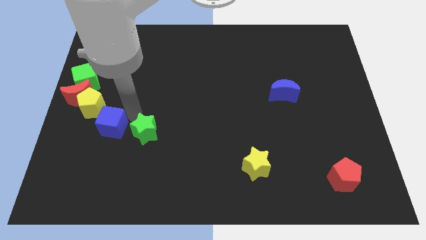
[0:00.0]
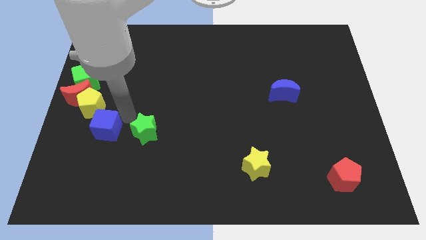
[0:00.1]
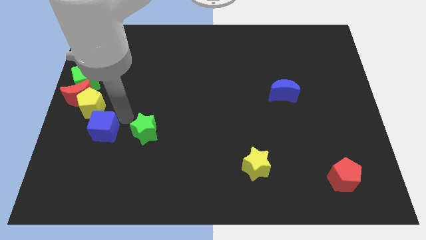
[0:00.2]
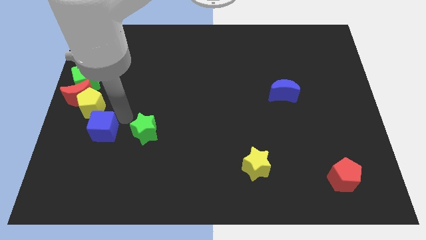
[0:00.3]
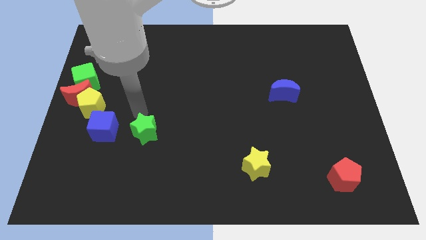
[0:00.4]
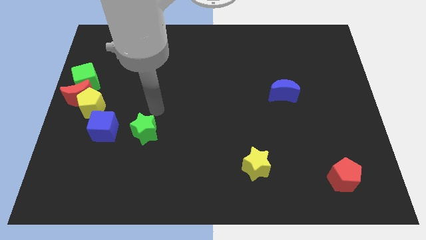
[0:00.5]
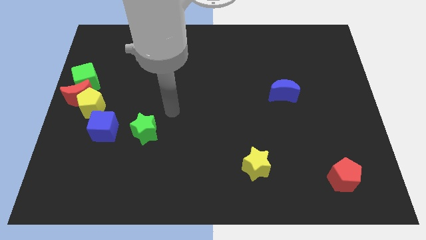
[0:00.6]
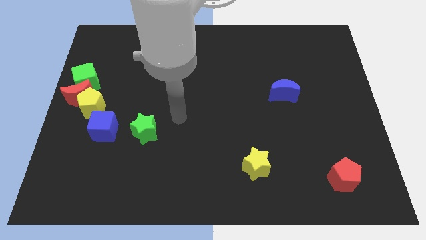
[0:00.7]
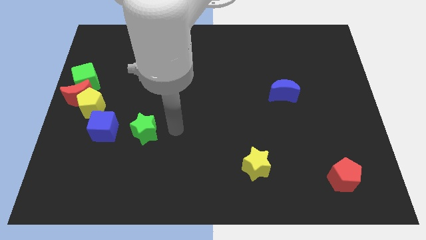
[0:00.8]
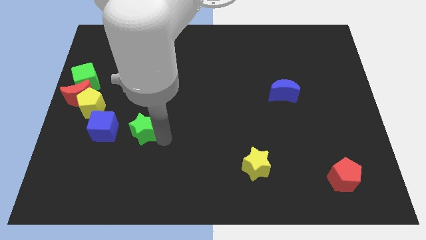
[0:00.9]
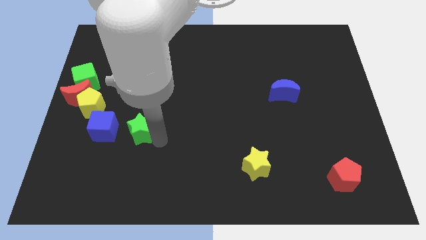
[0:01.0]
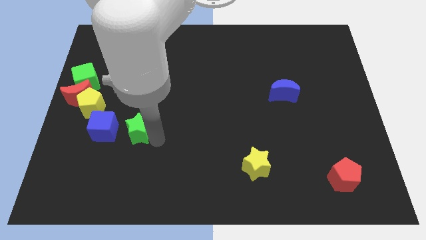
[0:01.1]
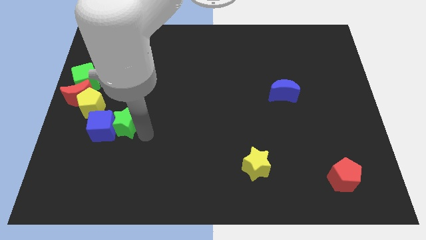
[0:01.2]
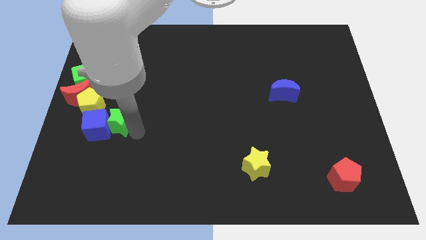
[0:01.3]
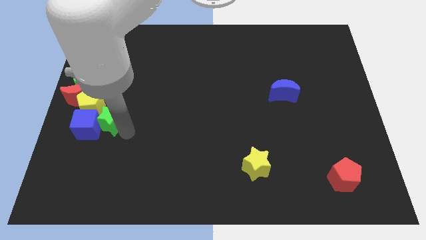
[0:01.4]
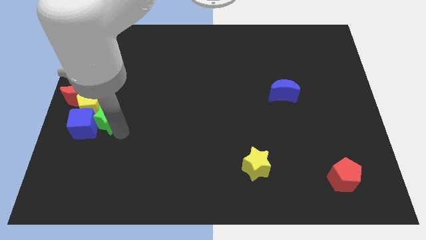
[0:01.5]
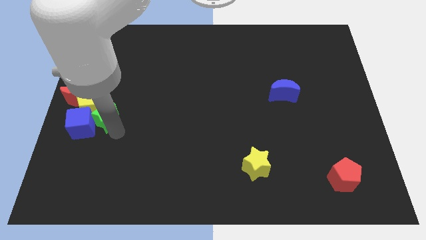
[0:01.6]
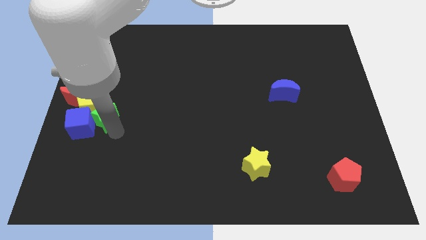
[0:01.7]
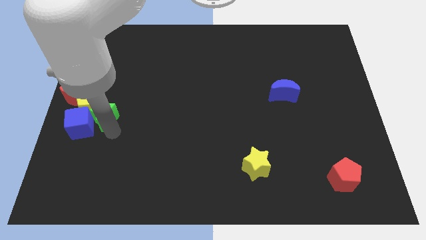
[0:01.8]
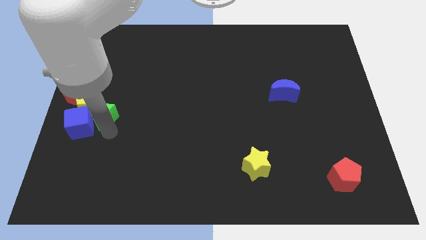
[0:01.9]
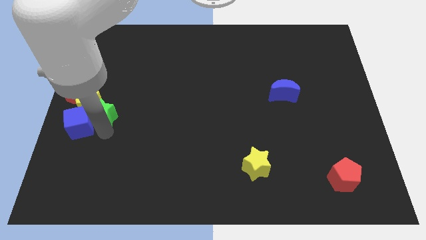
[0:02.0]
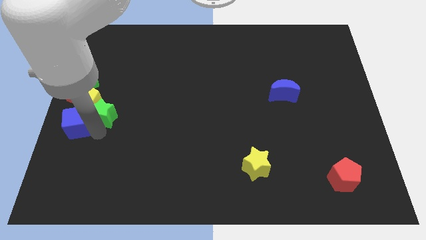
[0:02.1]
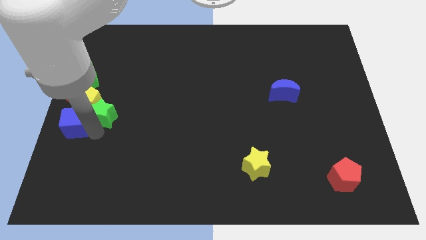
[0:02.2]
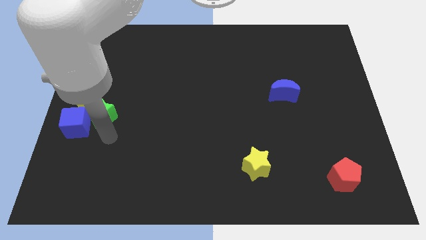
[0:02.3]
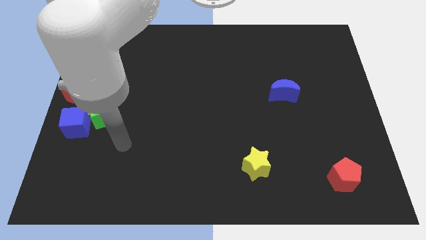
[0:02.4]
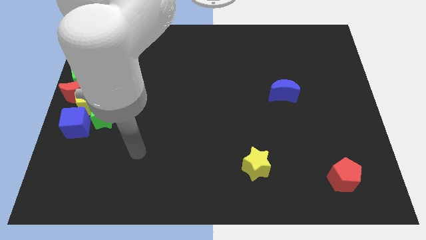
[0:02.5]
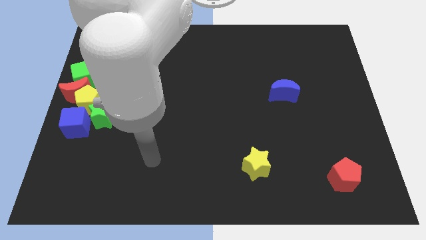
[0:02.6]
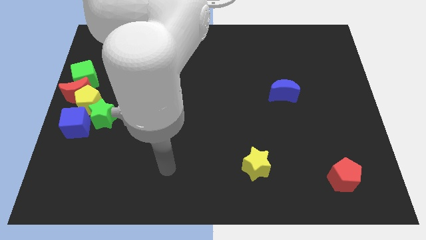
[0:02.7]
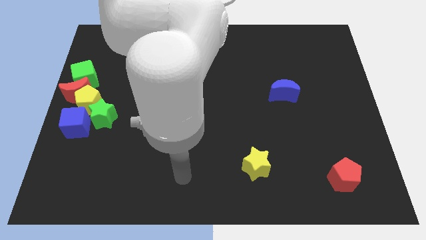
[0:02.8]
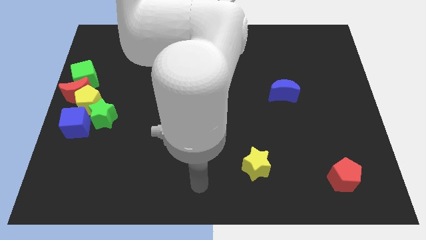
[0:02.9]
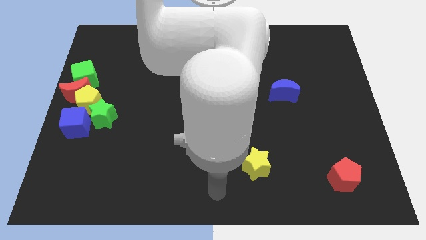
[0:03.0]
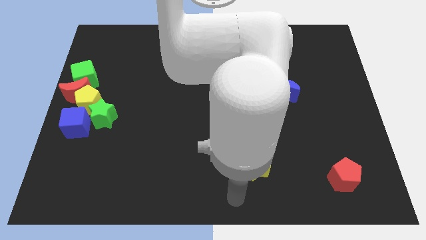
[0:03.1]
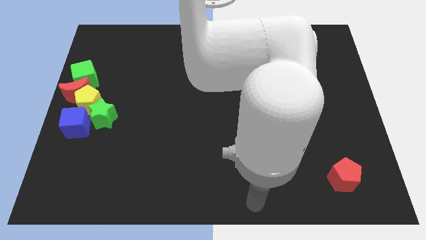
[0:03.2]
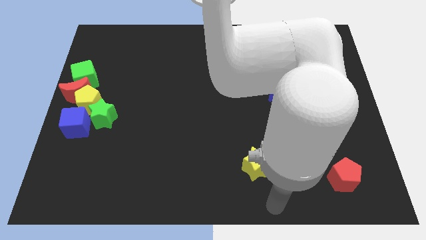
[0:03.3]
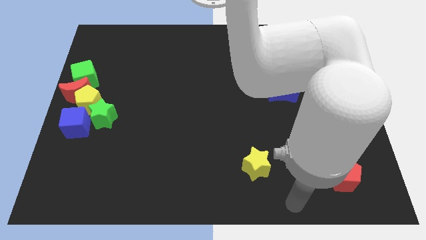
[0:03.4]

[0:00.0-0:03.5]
place blue cube to the bottom of yellow pentagon

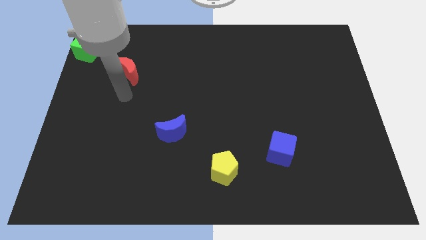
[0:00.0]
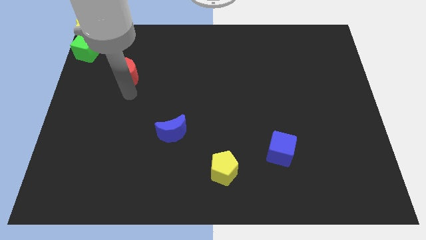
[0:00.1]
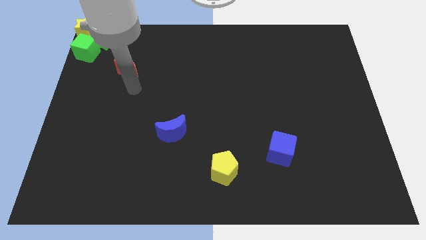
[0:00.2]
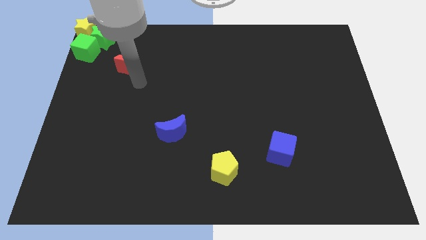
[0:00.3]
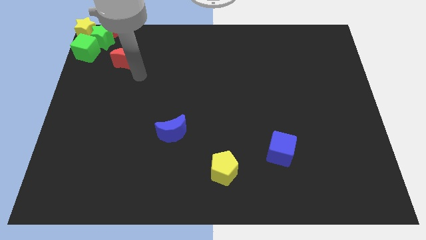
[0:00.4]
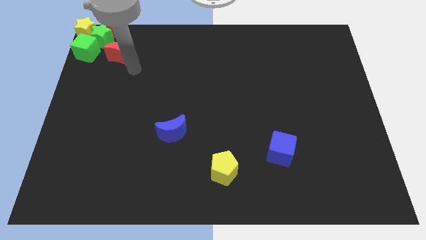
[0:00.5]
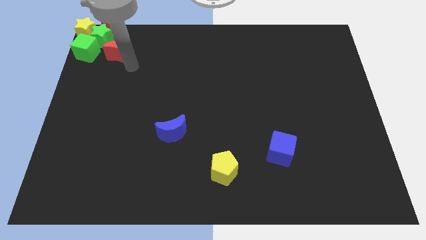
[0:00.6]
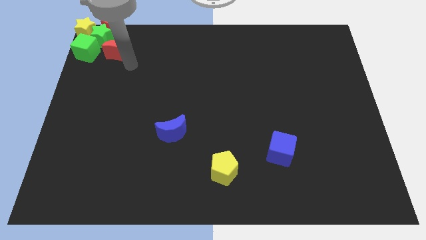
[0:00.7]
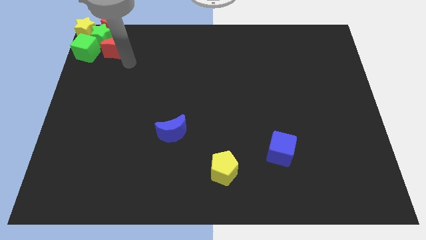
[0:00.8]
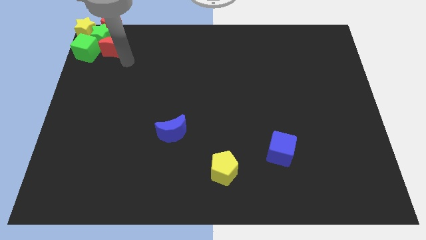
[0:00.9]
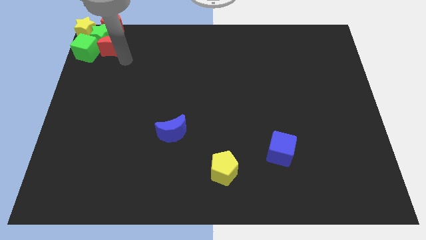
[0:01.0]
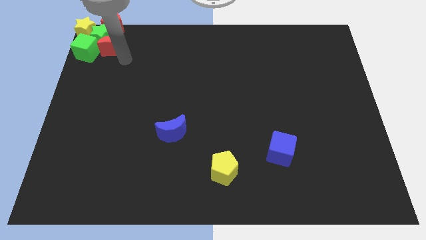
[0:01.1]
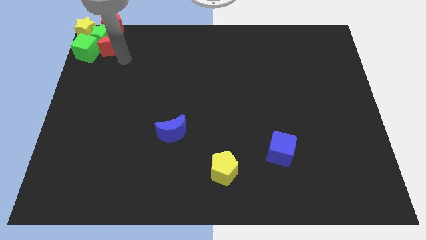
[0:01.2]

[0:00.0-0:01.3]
drag the red moon into the group of blocks

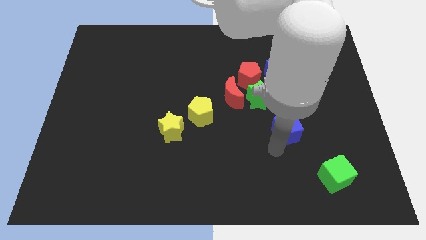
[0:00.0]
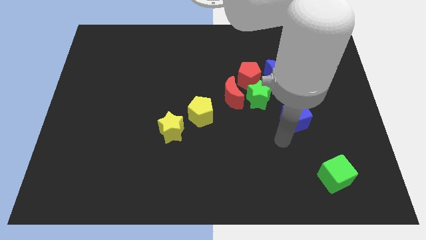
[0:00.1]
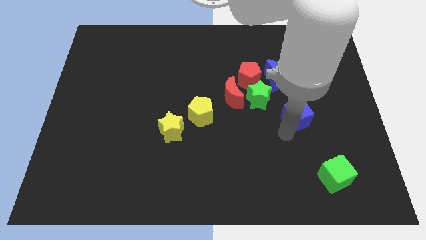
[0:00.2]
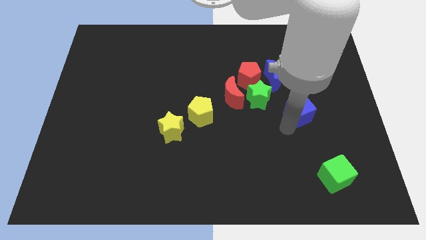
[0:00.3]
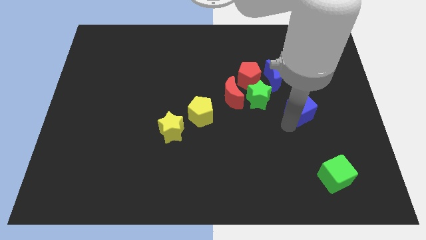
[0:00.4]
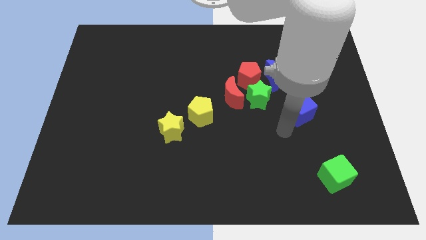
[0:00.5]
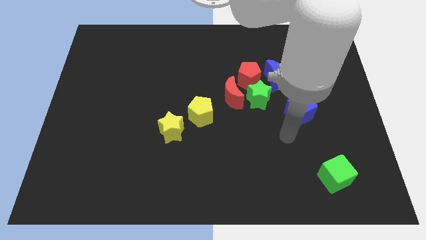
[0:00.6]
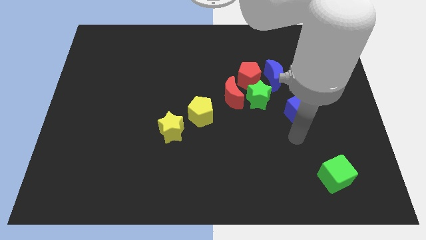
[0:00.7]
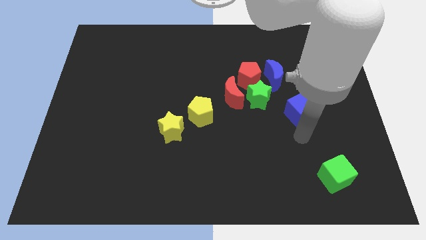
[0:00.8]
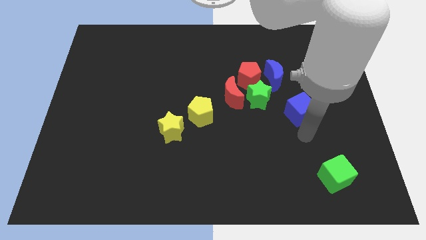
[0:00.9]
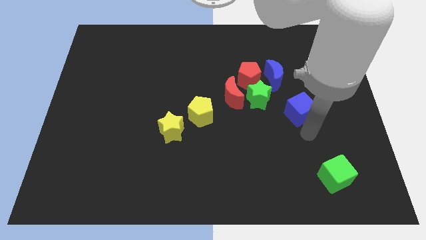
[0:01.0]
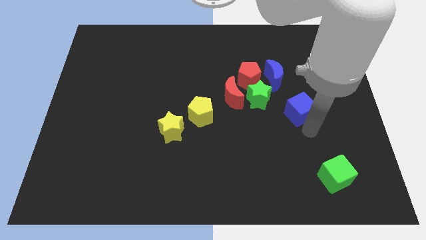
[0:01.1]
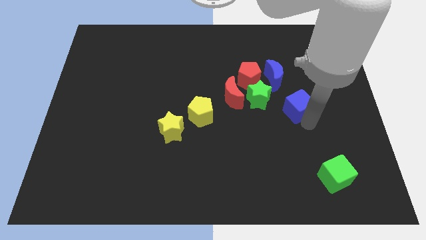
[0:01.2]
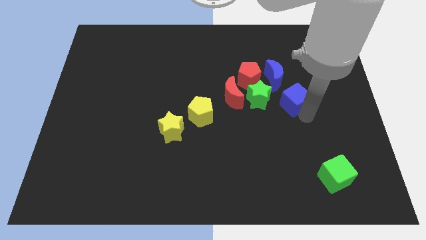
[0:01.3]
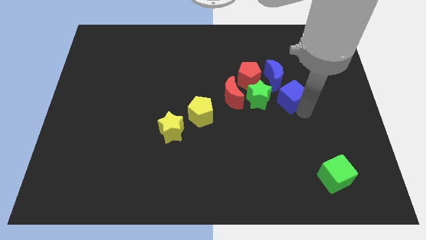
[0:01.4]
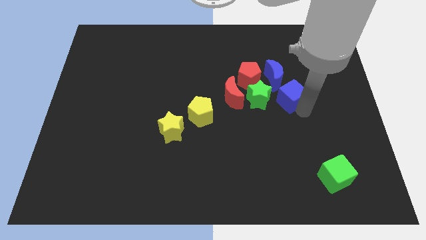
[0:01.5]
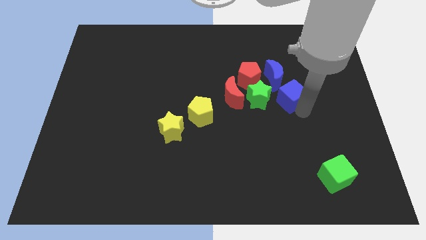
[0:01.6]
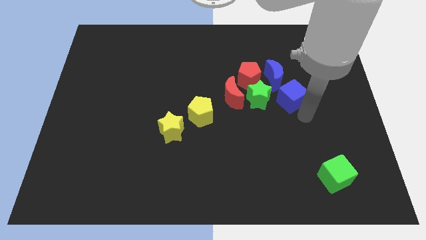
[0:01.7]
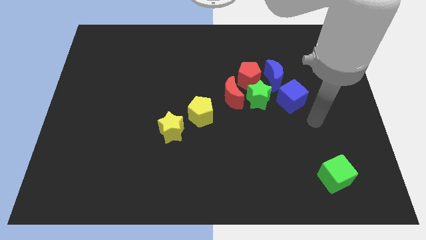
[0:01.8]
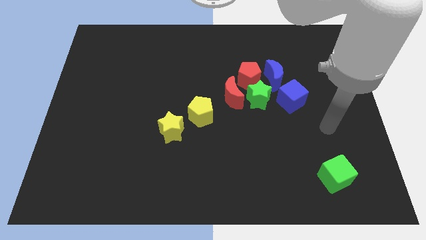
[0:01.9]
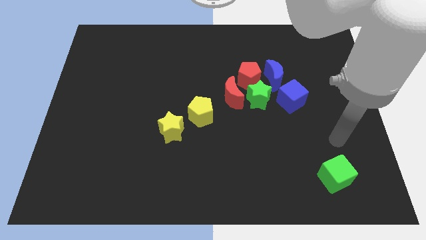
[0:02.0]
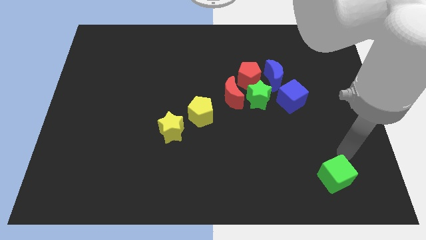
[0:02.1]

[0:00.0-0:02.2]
place the blue cube to the right bottom of the blue moon

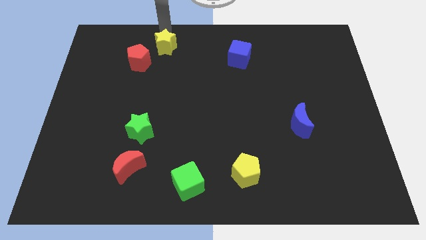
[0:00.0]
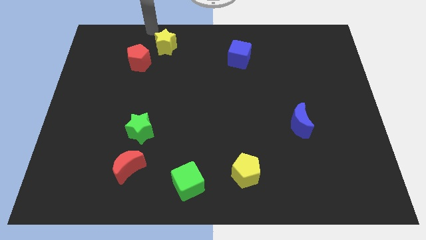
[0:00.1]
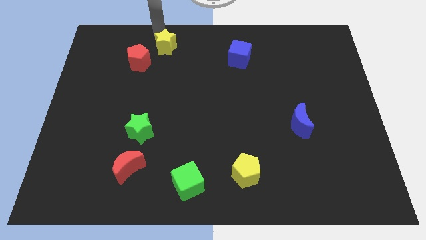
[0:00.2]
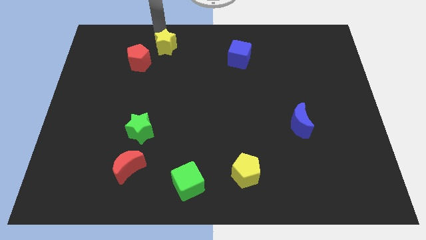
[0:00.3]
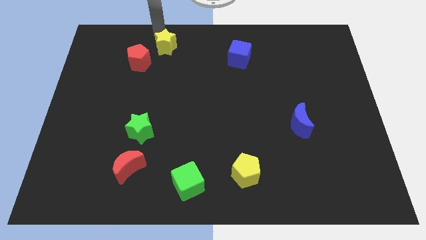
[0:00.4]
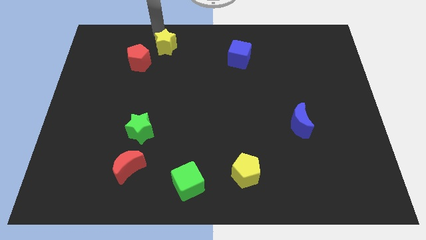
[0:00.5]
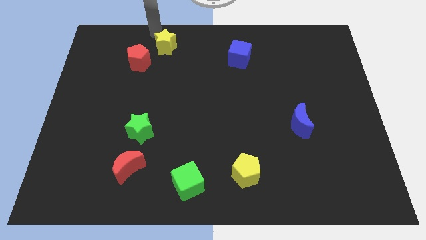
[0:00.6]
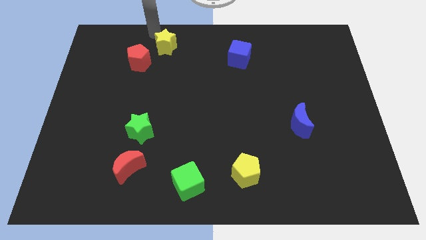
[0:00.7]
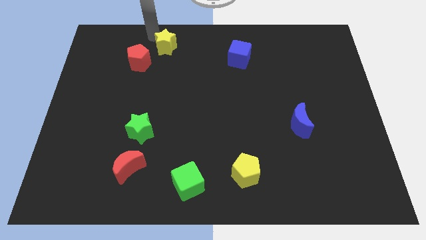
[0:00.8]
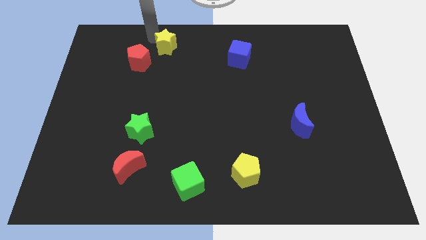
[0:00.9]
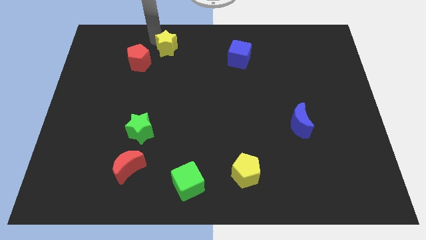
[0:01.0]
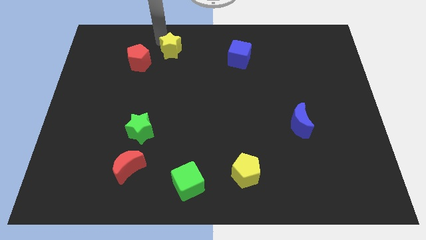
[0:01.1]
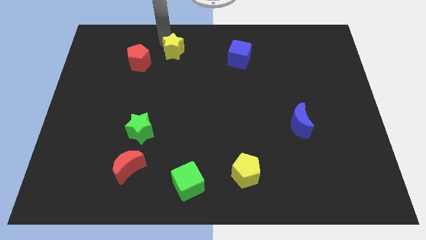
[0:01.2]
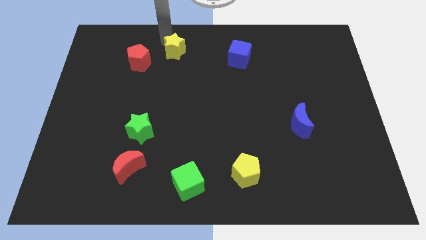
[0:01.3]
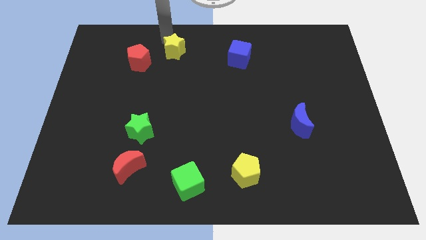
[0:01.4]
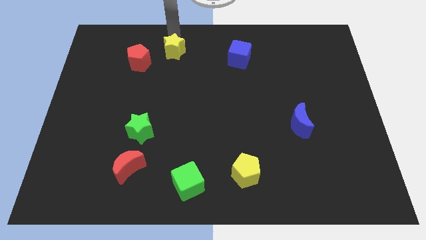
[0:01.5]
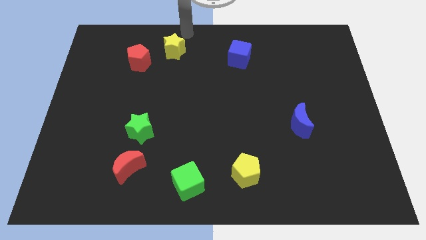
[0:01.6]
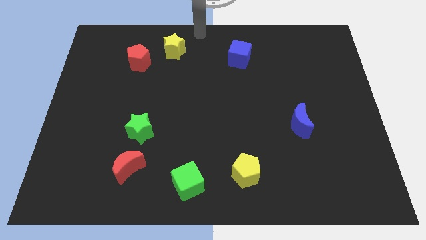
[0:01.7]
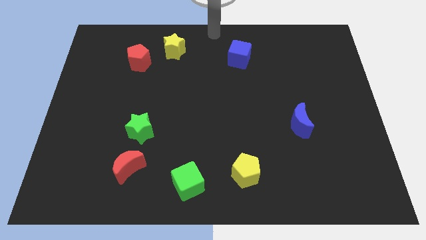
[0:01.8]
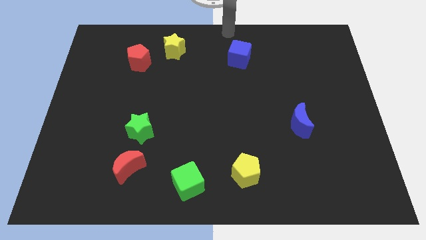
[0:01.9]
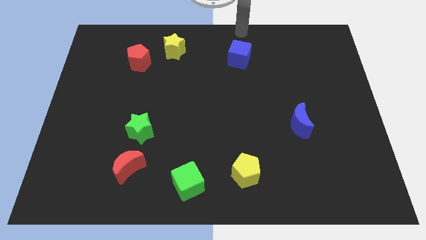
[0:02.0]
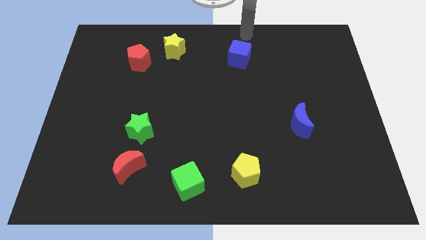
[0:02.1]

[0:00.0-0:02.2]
slightly push the yellow star towards the bottom
